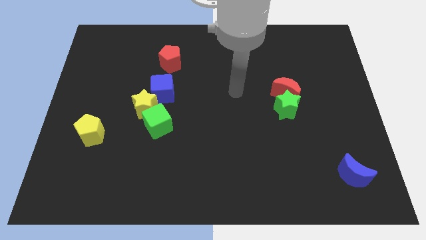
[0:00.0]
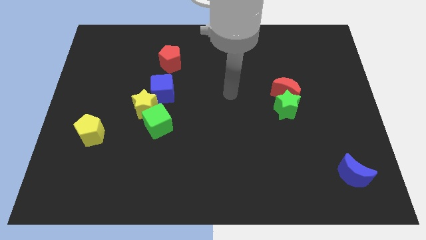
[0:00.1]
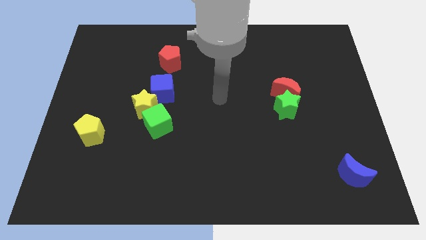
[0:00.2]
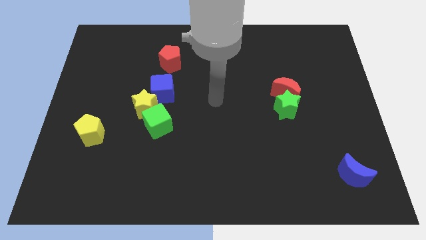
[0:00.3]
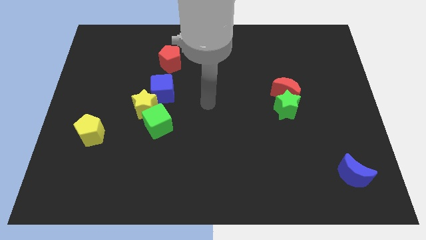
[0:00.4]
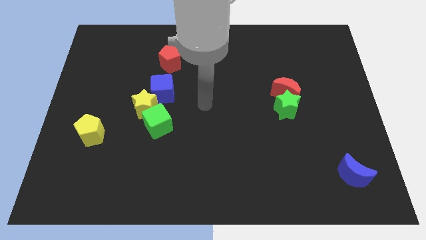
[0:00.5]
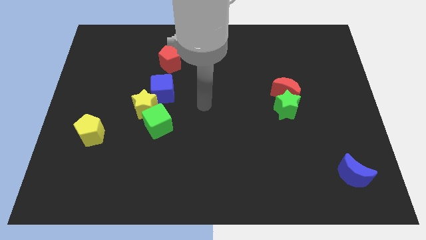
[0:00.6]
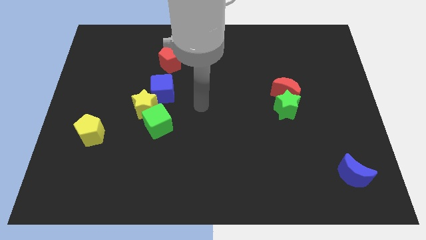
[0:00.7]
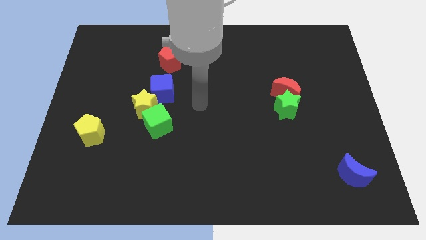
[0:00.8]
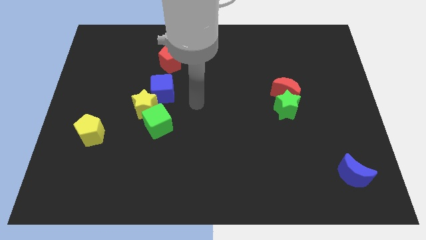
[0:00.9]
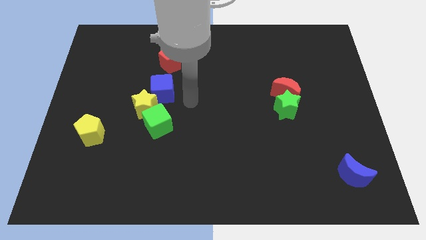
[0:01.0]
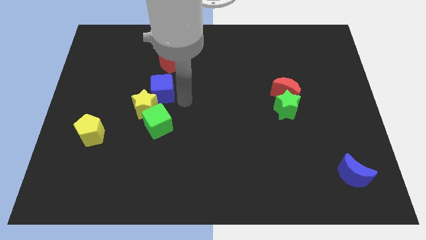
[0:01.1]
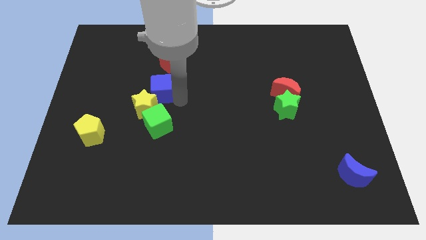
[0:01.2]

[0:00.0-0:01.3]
place the arm near the blue cube

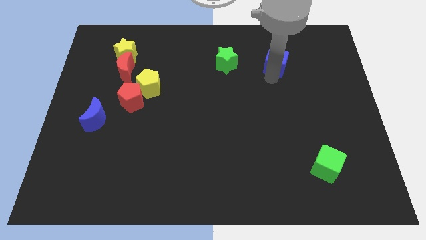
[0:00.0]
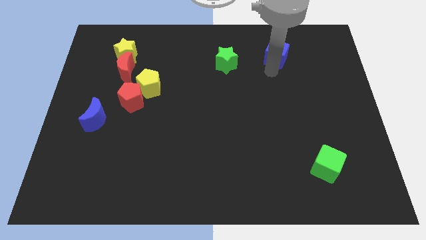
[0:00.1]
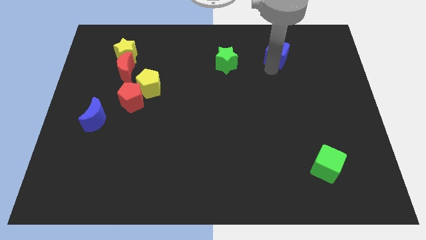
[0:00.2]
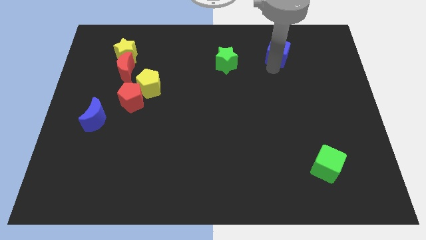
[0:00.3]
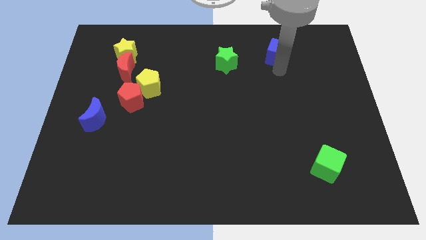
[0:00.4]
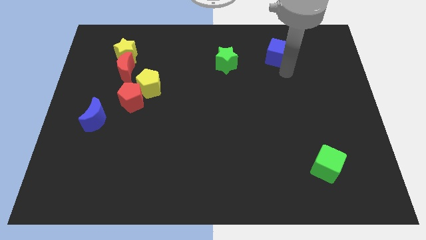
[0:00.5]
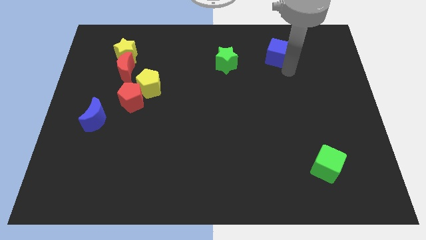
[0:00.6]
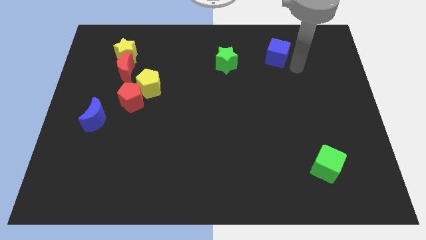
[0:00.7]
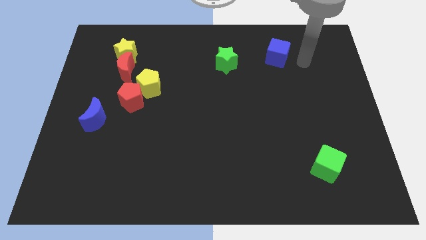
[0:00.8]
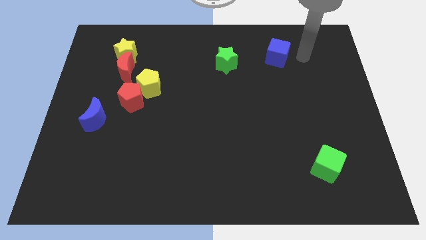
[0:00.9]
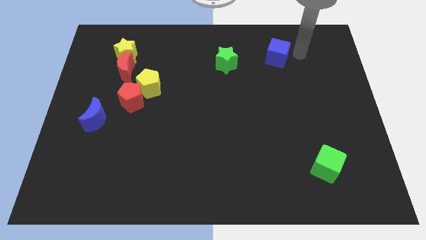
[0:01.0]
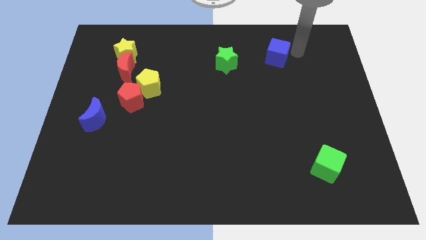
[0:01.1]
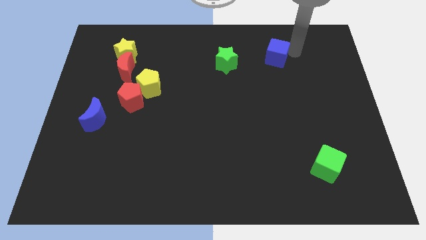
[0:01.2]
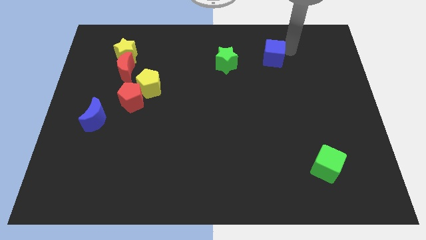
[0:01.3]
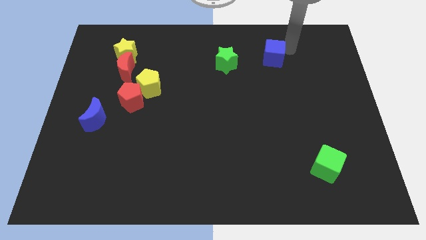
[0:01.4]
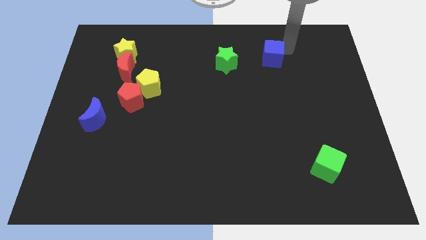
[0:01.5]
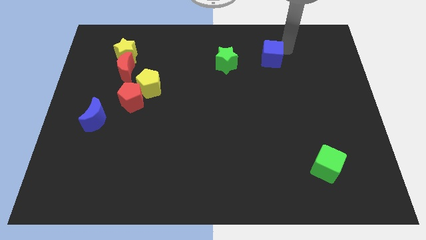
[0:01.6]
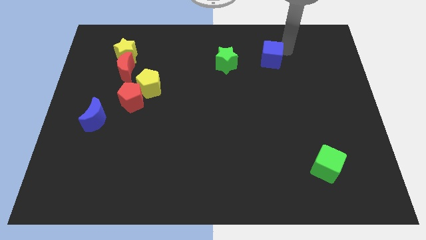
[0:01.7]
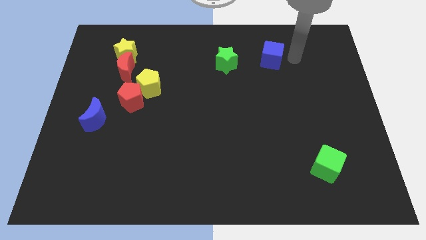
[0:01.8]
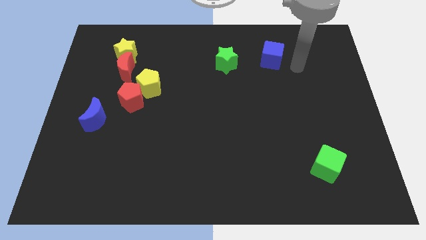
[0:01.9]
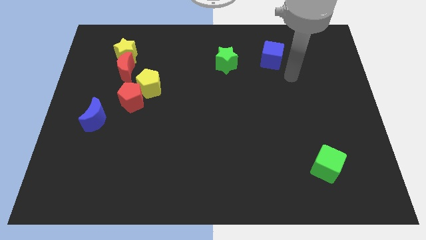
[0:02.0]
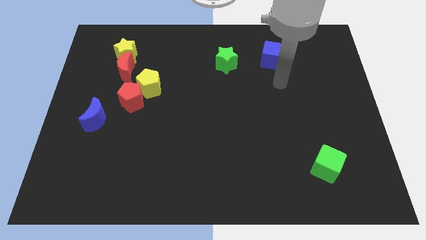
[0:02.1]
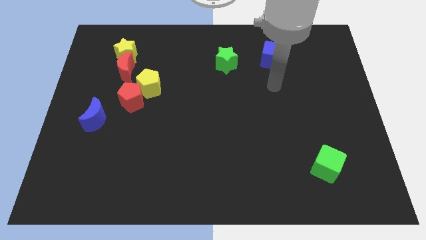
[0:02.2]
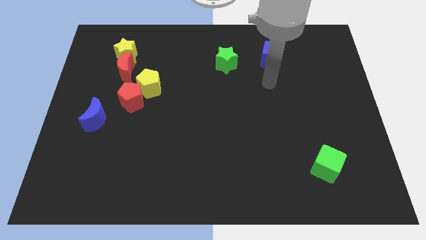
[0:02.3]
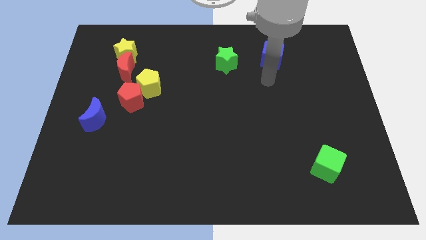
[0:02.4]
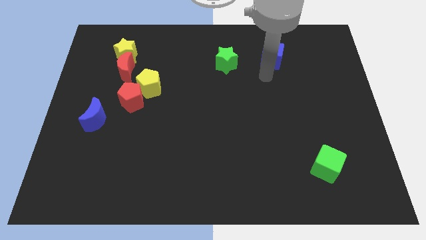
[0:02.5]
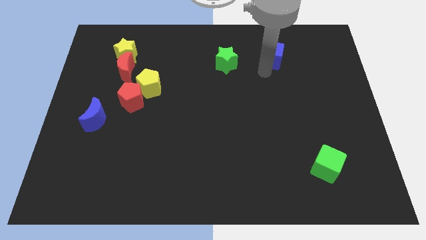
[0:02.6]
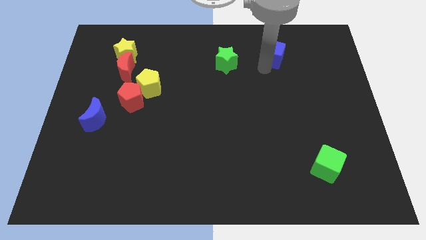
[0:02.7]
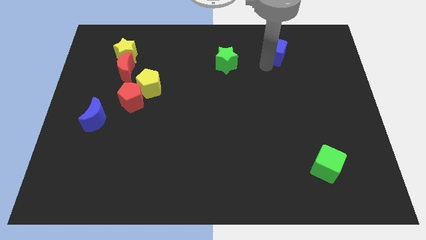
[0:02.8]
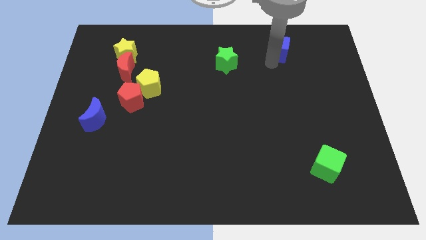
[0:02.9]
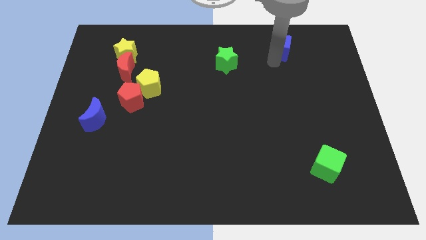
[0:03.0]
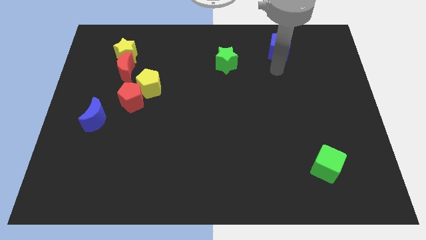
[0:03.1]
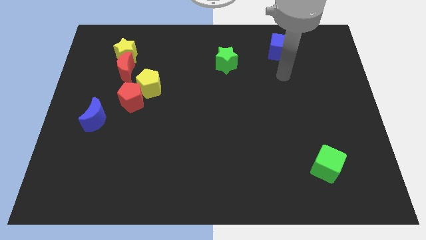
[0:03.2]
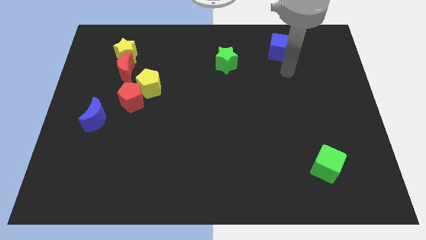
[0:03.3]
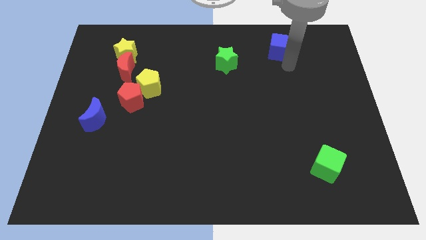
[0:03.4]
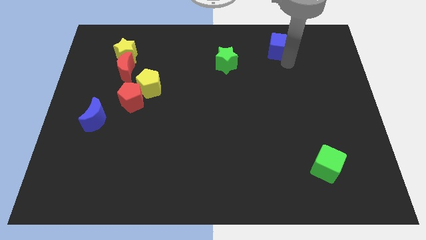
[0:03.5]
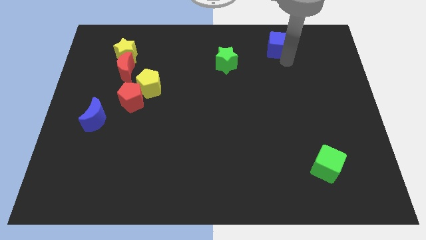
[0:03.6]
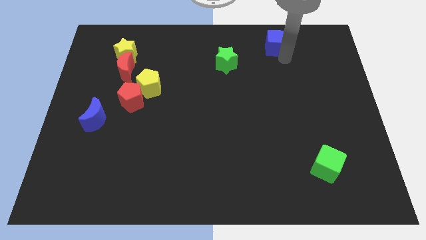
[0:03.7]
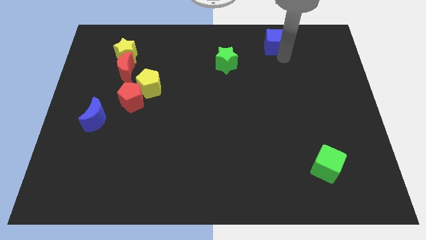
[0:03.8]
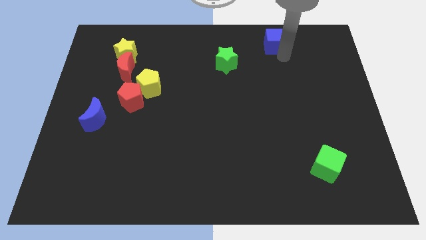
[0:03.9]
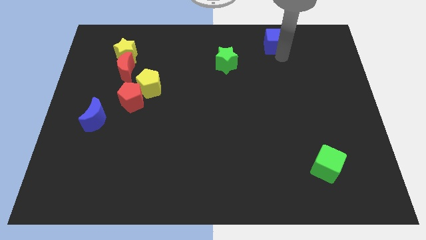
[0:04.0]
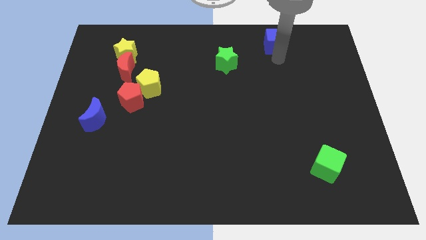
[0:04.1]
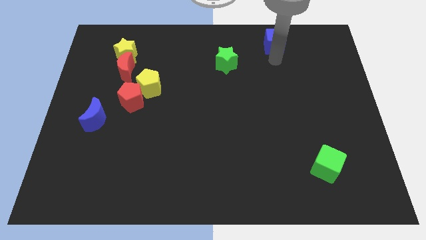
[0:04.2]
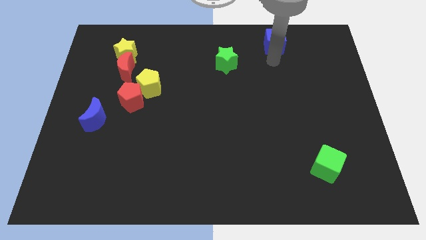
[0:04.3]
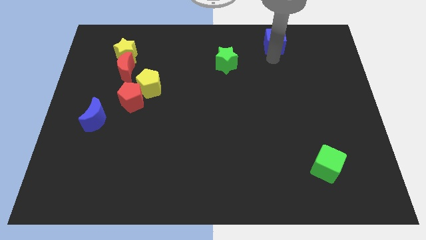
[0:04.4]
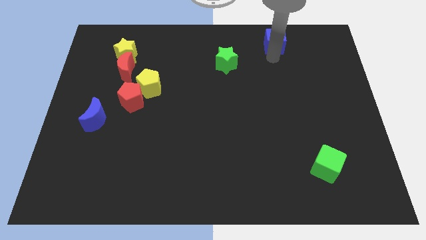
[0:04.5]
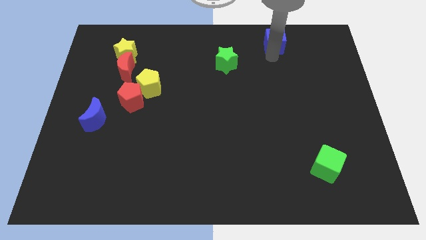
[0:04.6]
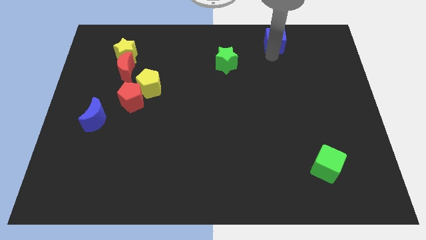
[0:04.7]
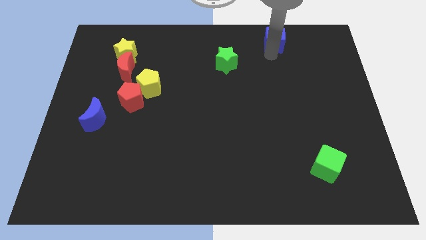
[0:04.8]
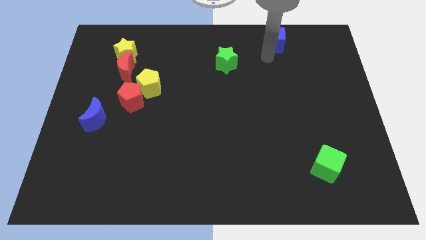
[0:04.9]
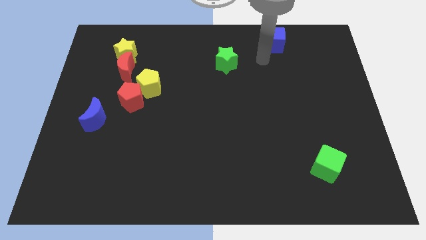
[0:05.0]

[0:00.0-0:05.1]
slide blue cube up a bit diagonal to green star

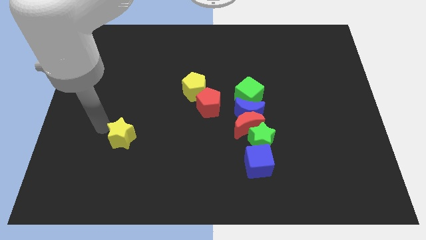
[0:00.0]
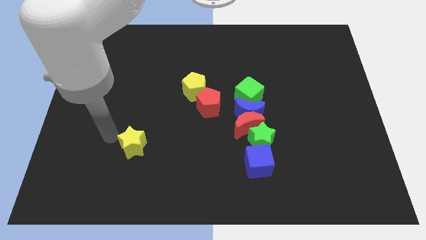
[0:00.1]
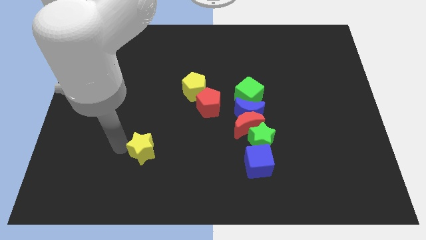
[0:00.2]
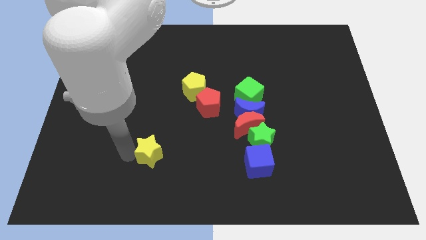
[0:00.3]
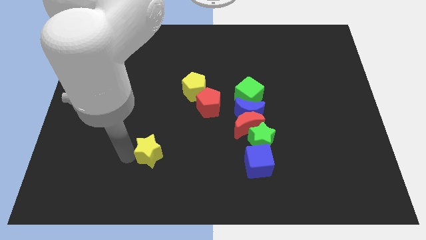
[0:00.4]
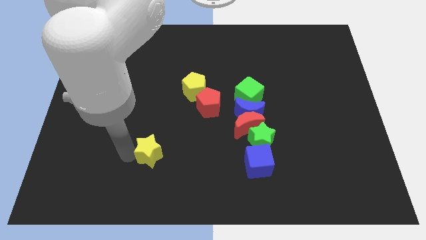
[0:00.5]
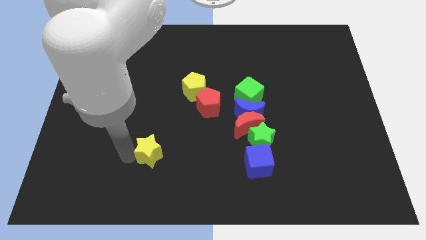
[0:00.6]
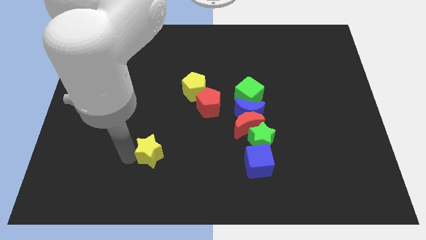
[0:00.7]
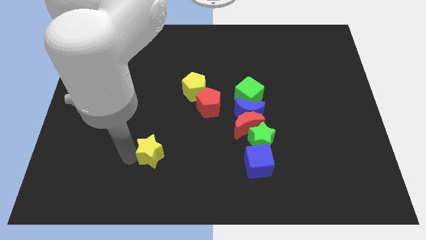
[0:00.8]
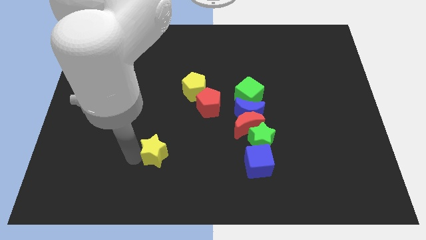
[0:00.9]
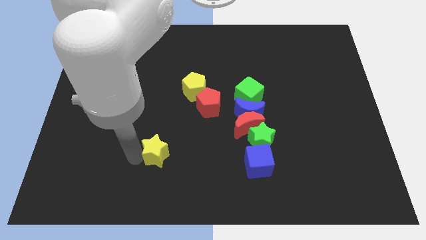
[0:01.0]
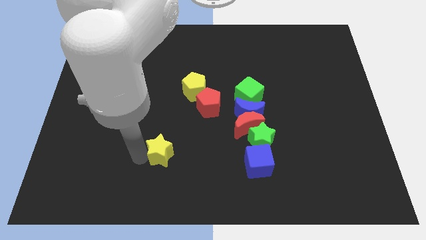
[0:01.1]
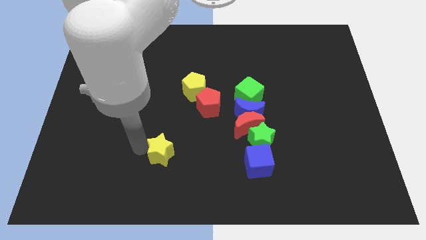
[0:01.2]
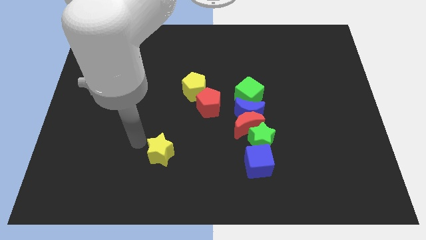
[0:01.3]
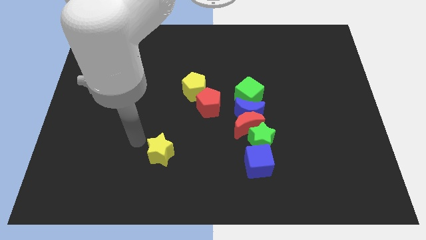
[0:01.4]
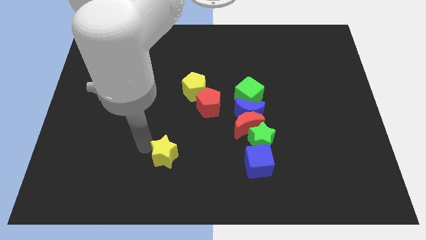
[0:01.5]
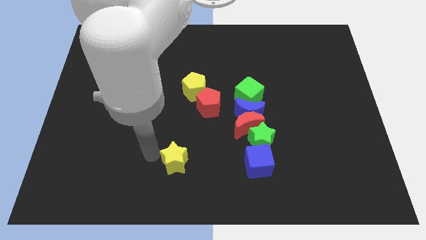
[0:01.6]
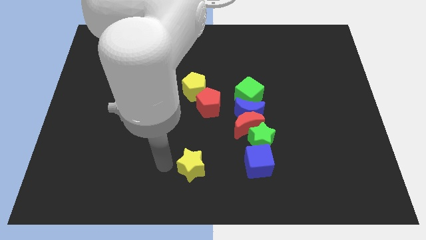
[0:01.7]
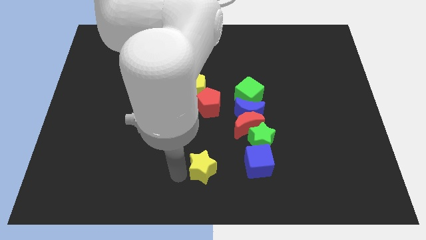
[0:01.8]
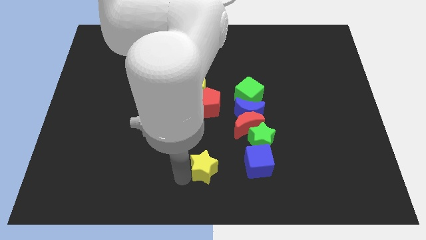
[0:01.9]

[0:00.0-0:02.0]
move the yellow star diagonal to the left of the blue cube

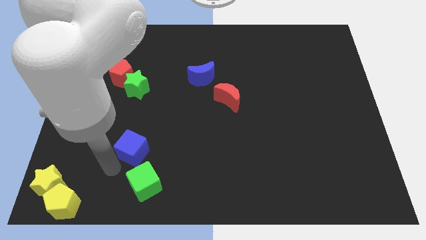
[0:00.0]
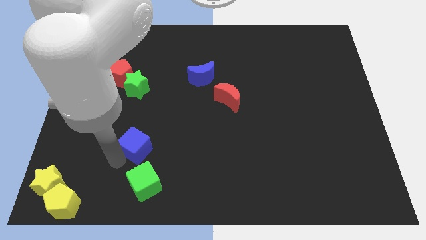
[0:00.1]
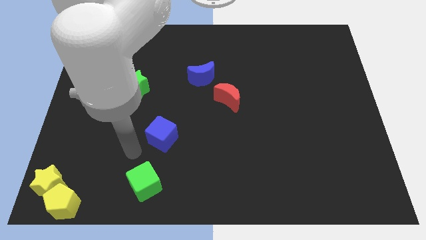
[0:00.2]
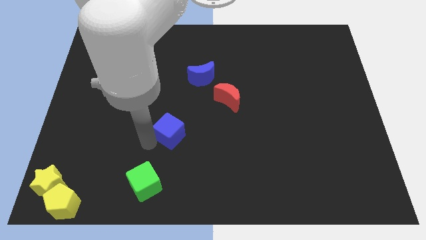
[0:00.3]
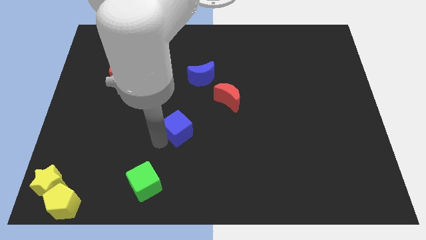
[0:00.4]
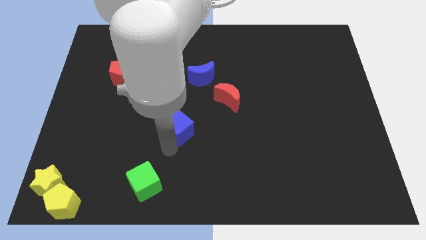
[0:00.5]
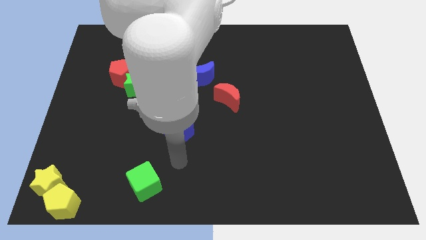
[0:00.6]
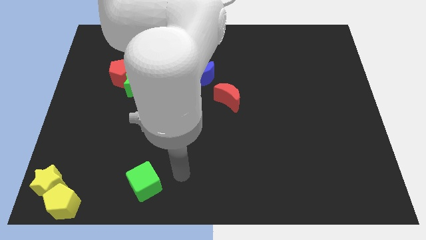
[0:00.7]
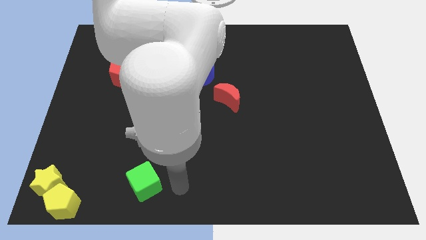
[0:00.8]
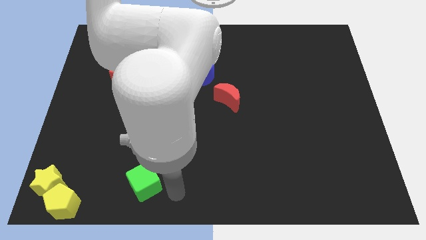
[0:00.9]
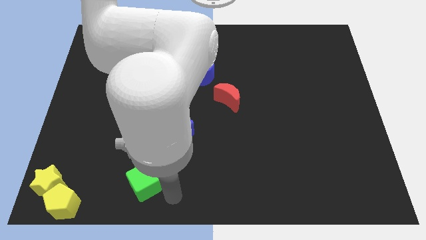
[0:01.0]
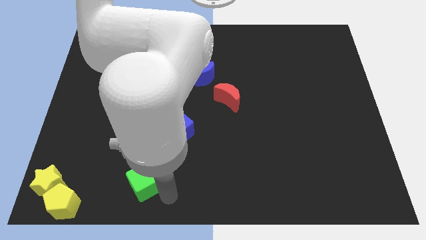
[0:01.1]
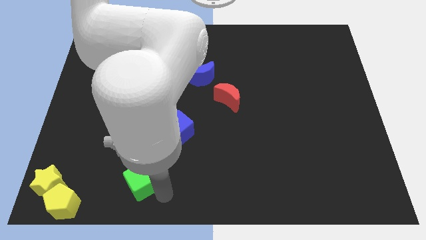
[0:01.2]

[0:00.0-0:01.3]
drag the blue cube diagonally top right to the green cube
